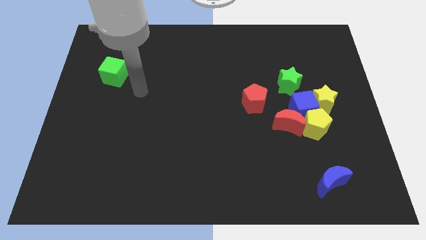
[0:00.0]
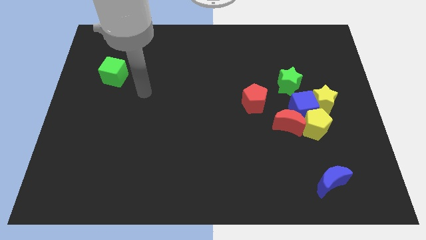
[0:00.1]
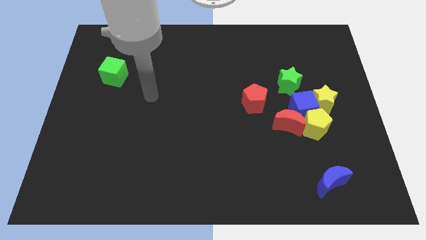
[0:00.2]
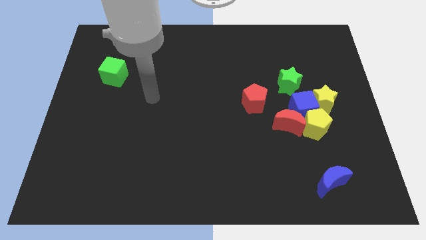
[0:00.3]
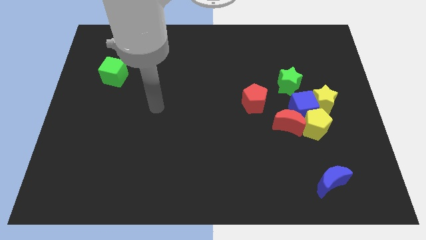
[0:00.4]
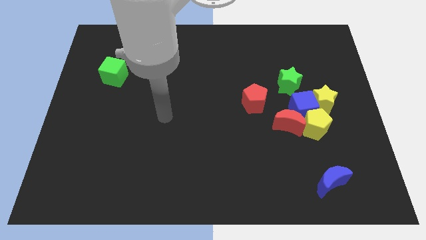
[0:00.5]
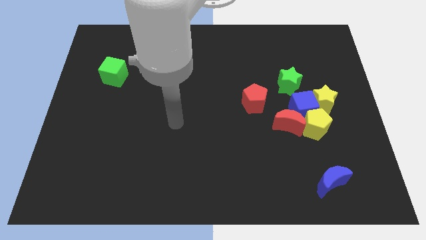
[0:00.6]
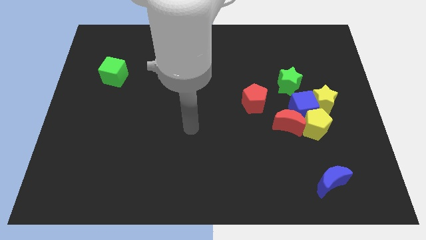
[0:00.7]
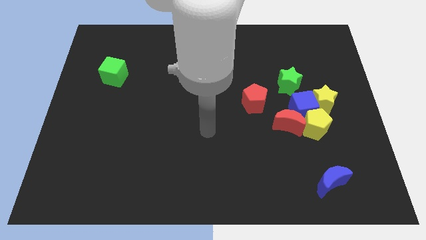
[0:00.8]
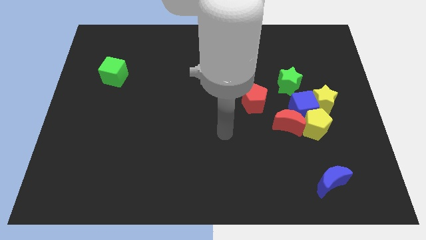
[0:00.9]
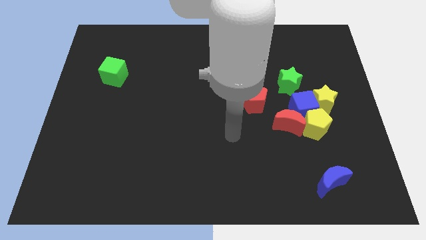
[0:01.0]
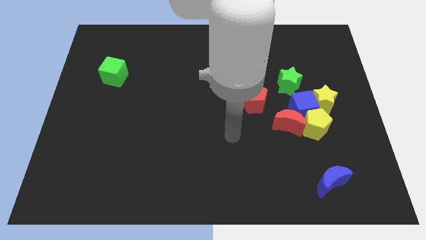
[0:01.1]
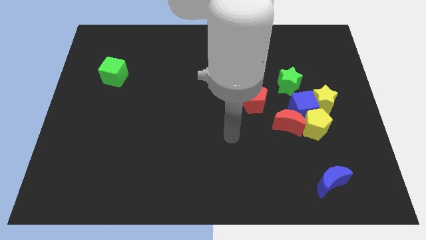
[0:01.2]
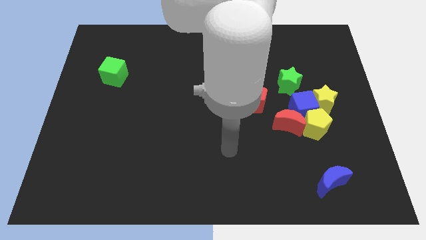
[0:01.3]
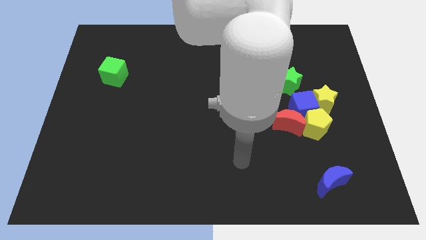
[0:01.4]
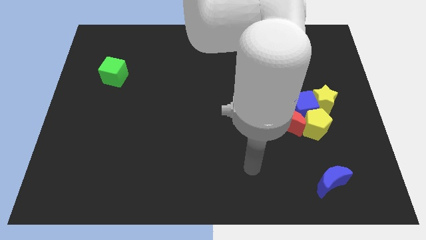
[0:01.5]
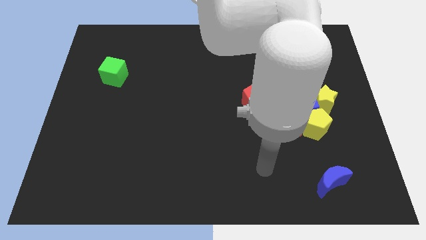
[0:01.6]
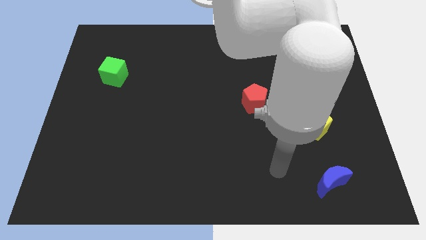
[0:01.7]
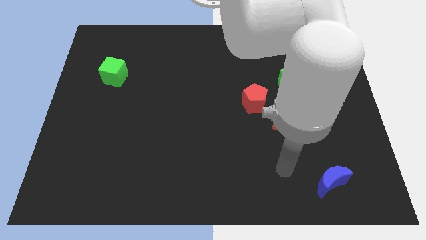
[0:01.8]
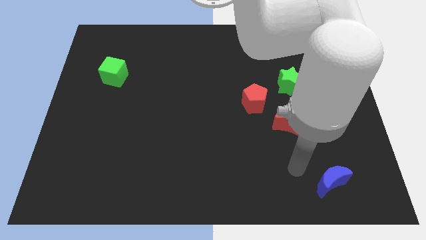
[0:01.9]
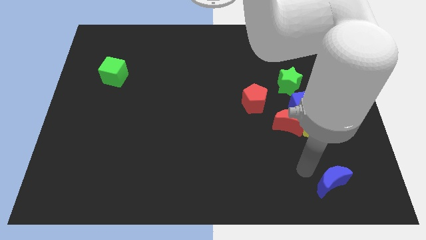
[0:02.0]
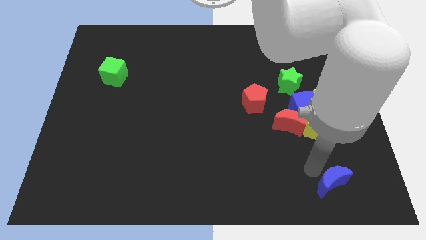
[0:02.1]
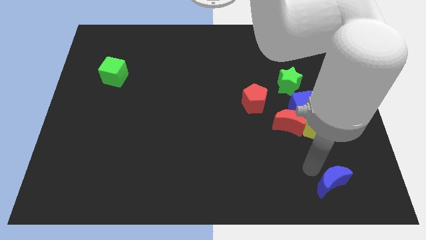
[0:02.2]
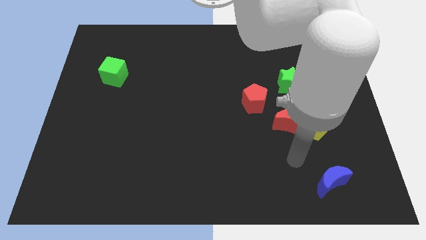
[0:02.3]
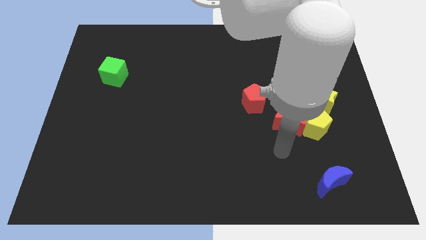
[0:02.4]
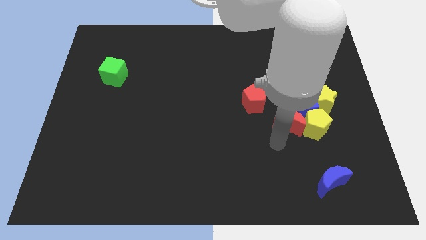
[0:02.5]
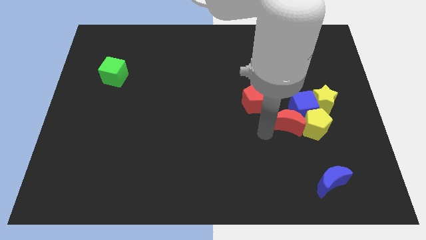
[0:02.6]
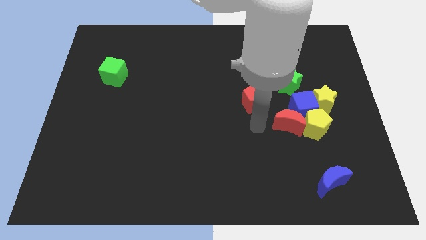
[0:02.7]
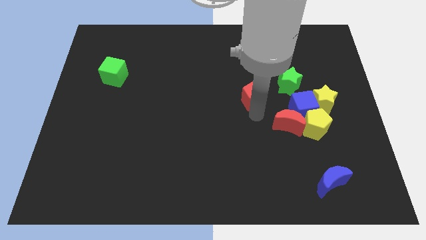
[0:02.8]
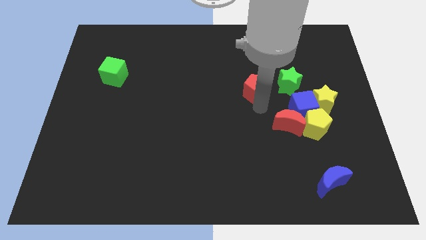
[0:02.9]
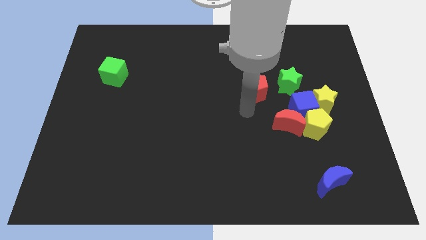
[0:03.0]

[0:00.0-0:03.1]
move the red pentagon left to the green star

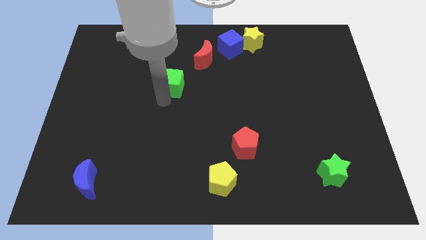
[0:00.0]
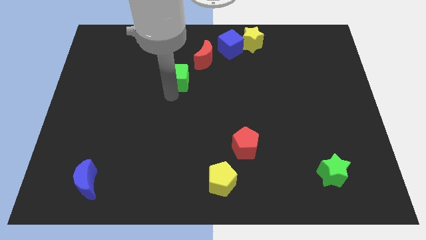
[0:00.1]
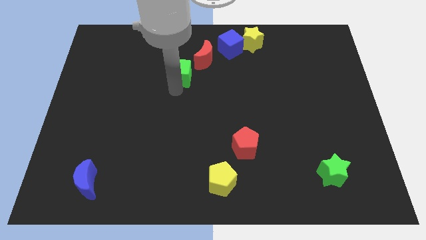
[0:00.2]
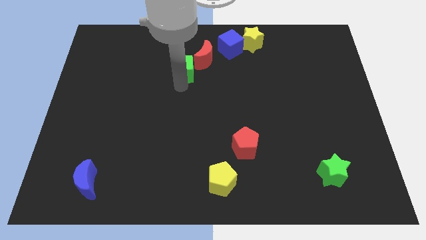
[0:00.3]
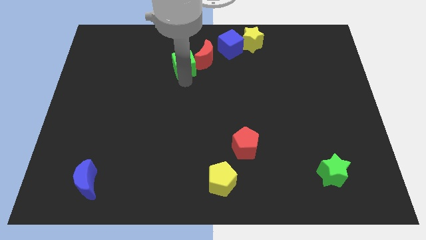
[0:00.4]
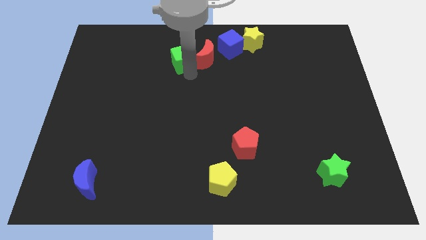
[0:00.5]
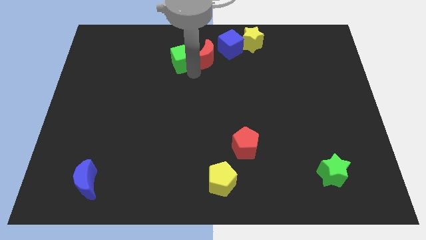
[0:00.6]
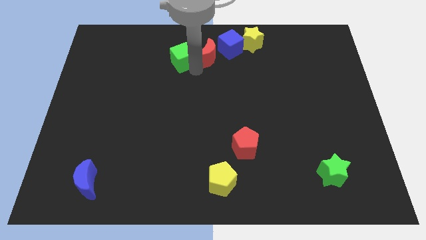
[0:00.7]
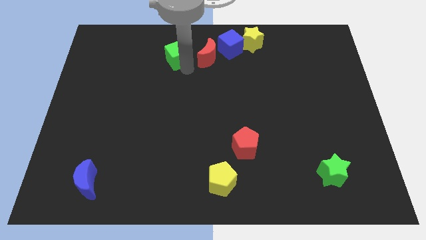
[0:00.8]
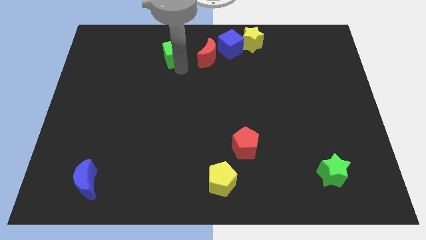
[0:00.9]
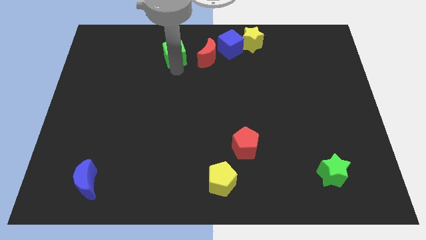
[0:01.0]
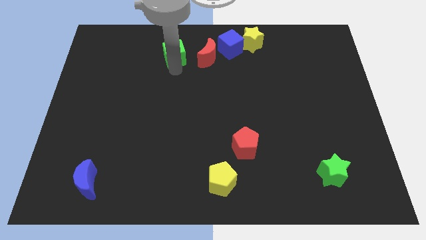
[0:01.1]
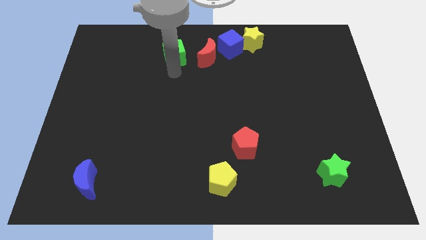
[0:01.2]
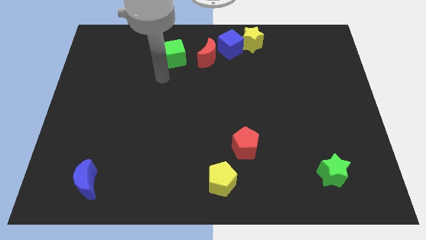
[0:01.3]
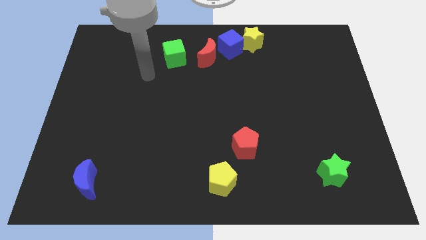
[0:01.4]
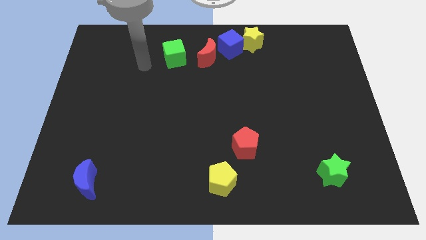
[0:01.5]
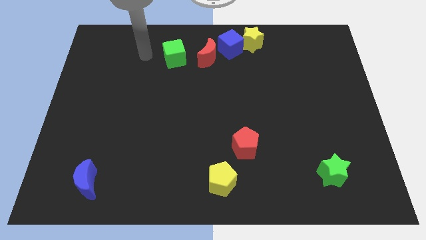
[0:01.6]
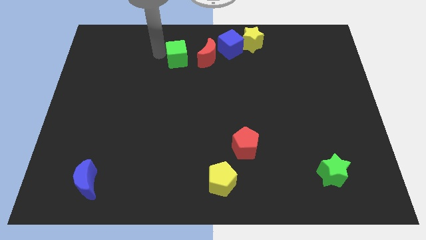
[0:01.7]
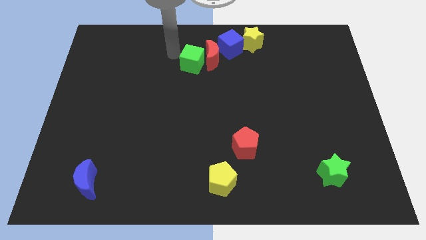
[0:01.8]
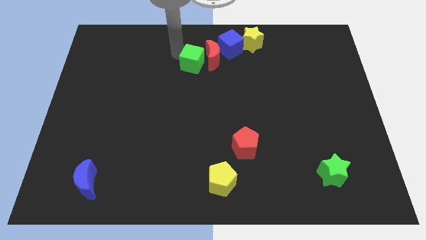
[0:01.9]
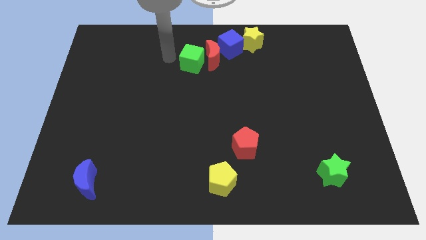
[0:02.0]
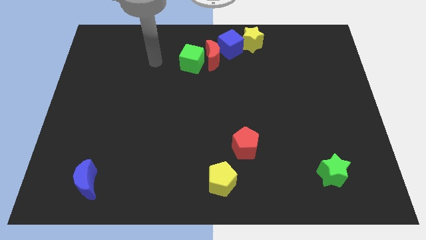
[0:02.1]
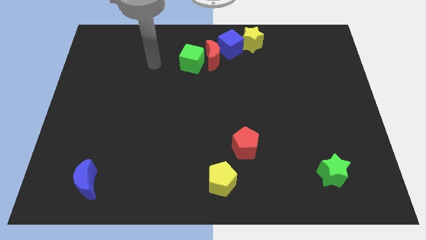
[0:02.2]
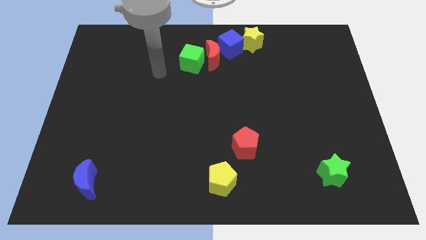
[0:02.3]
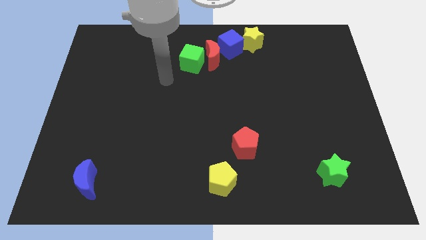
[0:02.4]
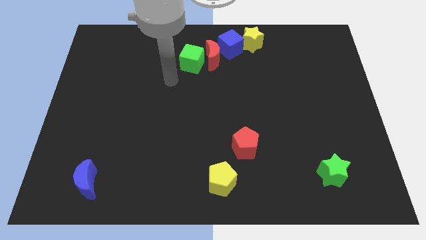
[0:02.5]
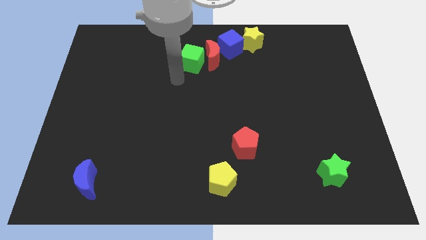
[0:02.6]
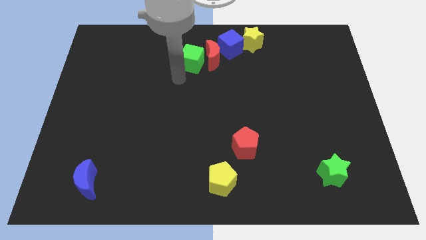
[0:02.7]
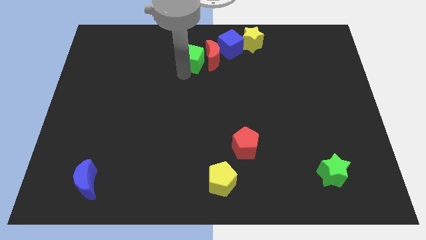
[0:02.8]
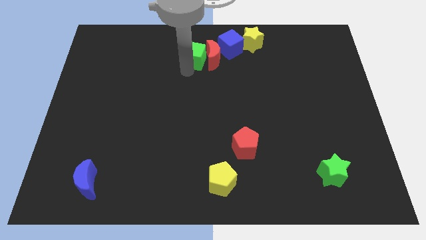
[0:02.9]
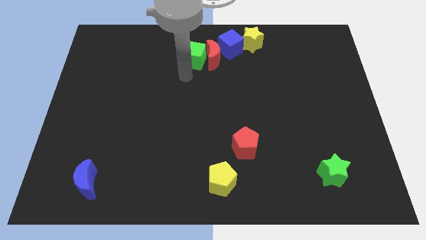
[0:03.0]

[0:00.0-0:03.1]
move the green cube into the left side of the red crescent

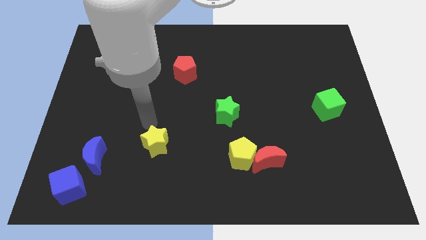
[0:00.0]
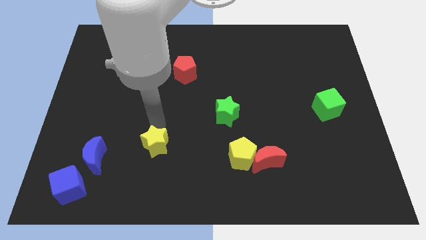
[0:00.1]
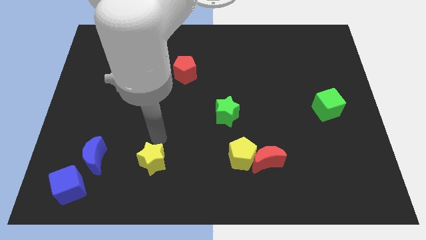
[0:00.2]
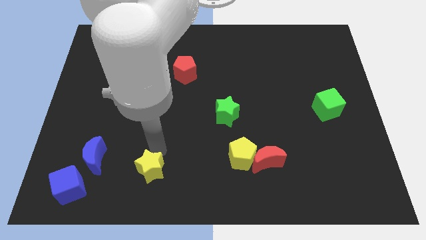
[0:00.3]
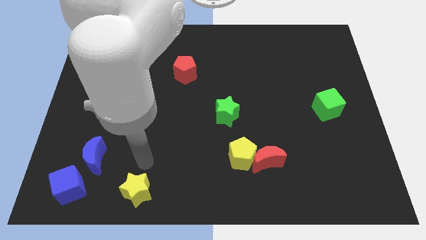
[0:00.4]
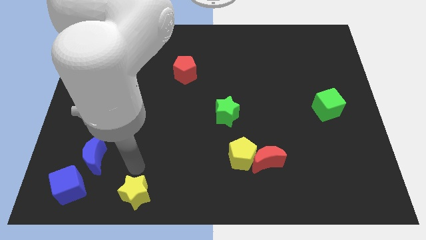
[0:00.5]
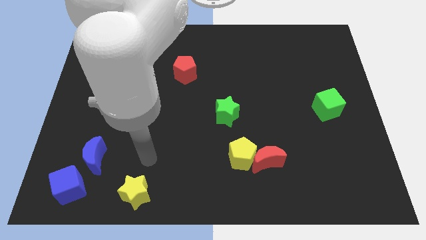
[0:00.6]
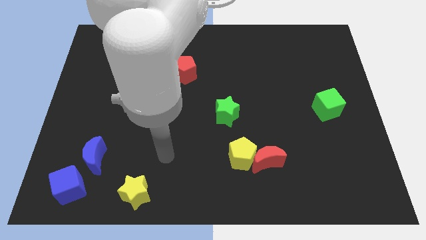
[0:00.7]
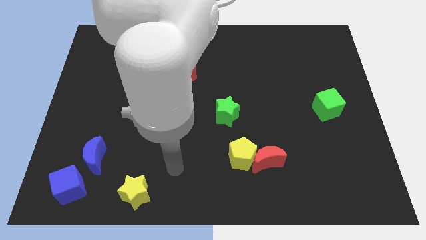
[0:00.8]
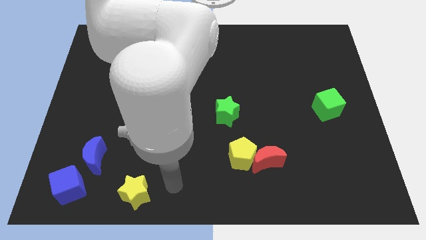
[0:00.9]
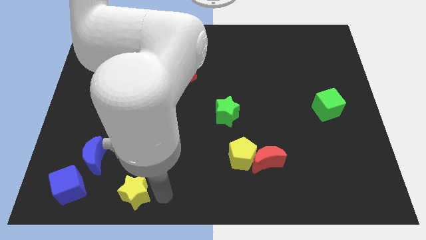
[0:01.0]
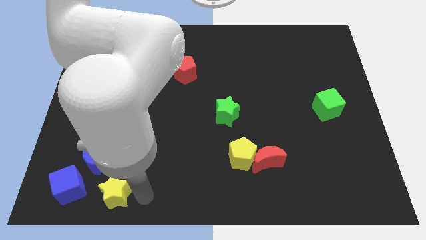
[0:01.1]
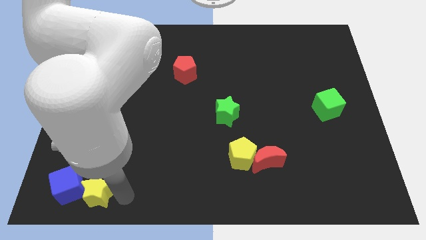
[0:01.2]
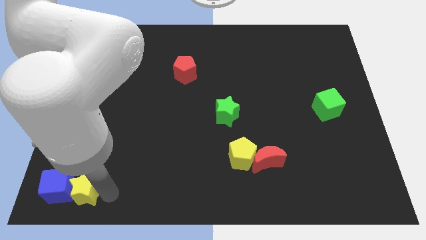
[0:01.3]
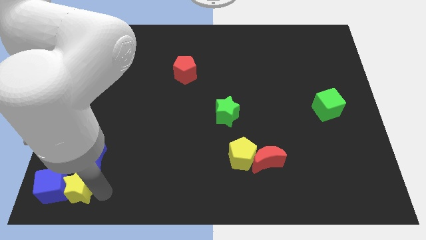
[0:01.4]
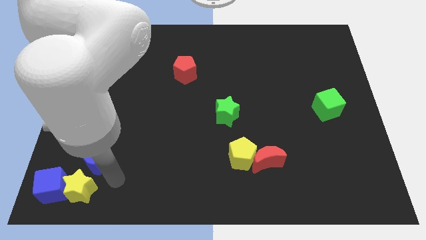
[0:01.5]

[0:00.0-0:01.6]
move the yellow star into the blue cube

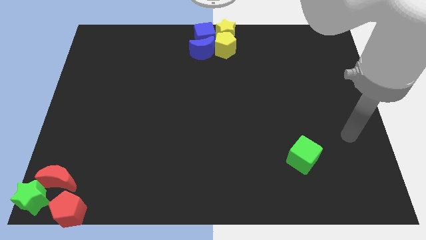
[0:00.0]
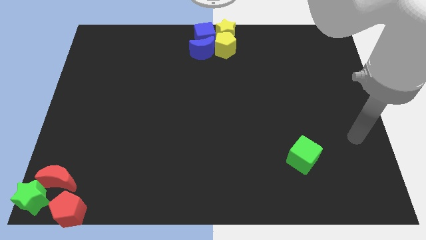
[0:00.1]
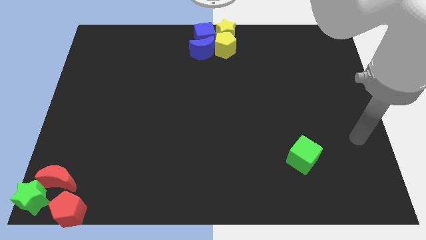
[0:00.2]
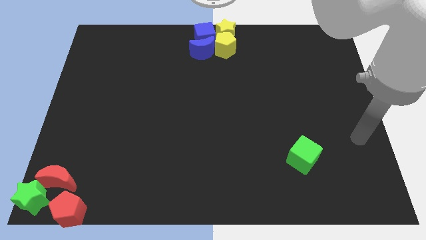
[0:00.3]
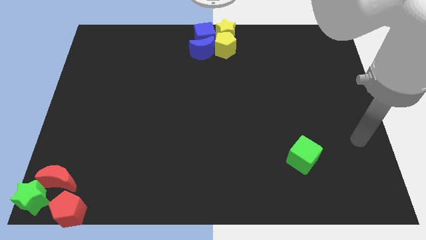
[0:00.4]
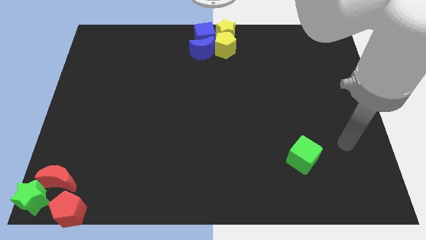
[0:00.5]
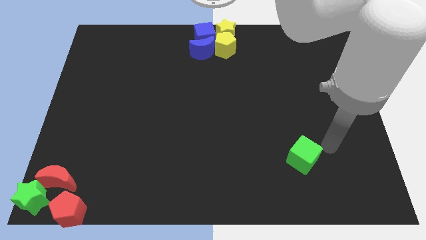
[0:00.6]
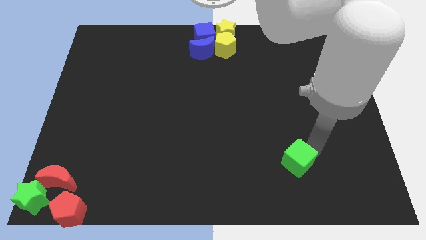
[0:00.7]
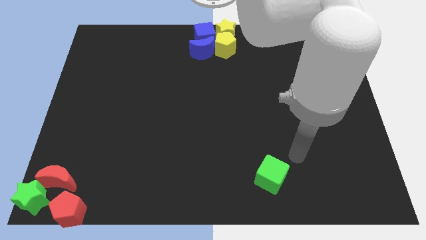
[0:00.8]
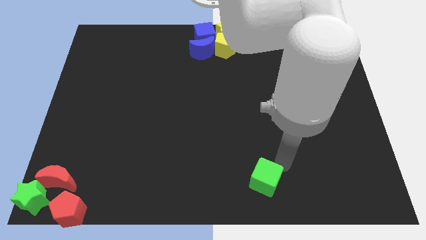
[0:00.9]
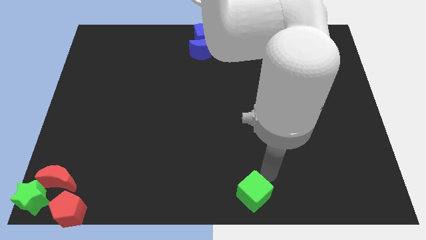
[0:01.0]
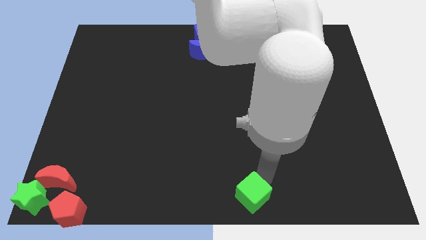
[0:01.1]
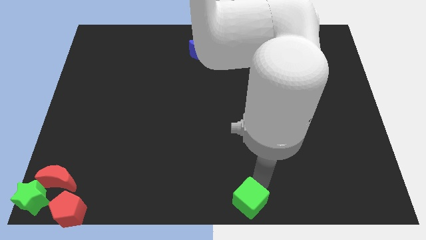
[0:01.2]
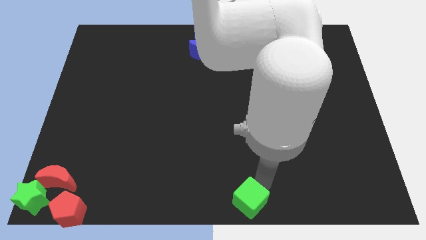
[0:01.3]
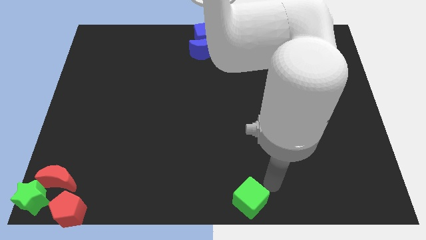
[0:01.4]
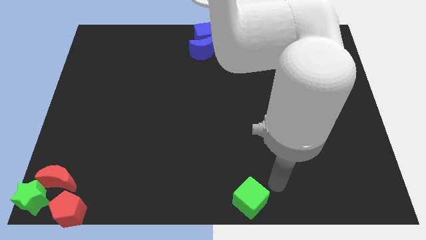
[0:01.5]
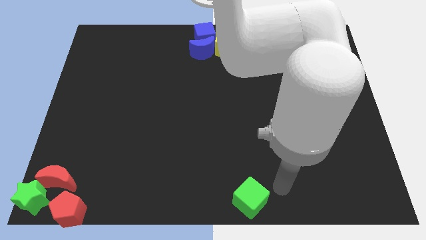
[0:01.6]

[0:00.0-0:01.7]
move the green cube at the bottom center of the board
